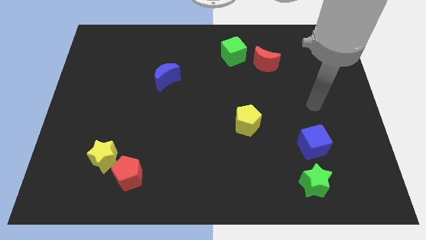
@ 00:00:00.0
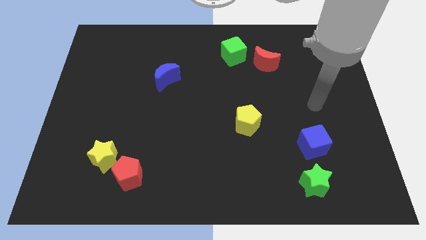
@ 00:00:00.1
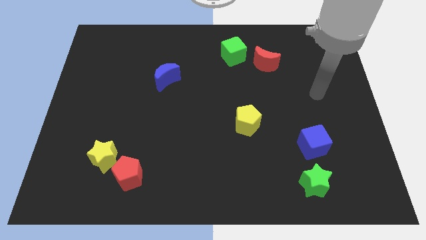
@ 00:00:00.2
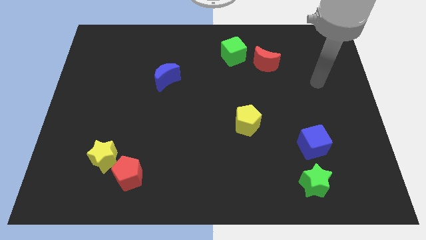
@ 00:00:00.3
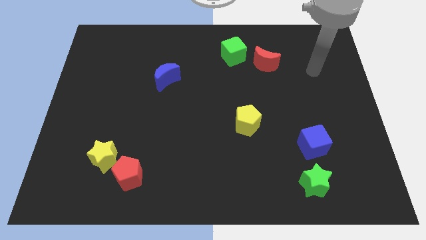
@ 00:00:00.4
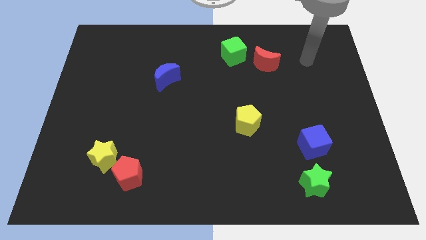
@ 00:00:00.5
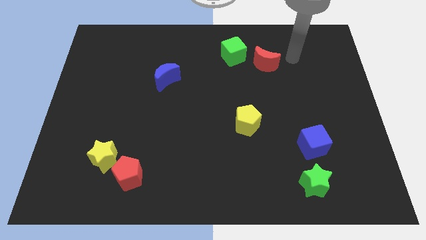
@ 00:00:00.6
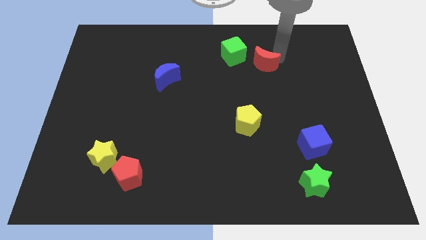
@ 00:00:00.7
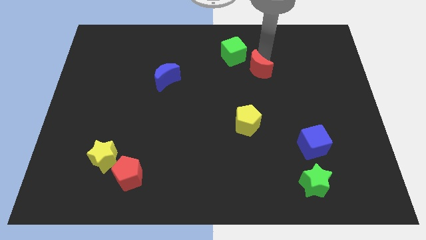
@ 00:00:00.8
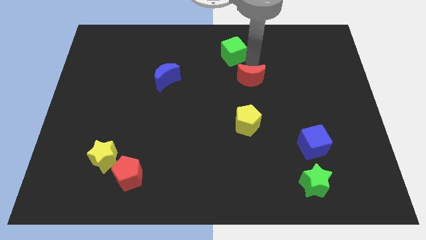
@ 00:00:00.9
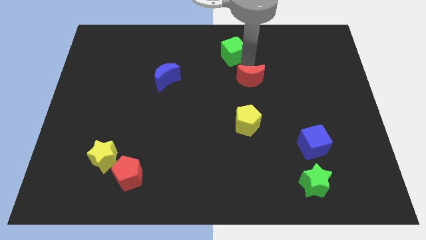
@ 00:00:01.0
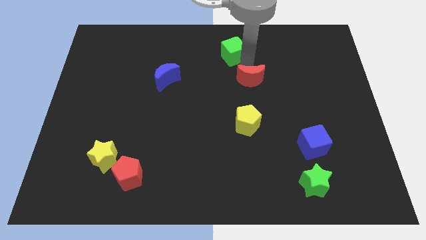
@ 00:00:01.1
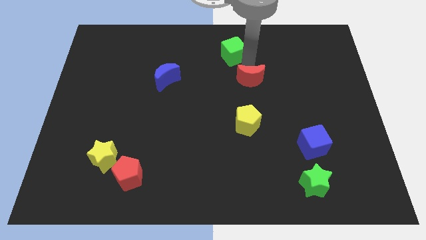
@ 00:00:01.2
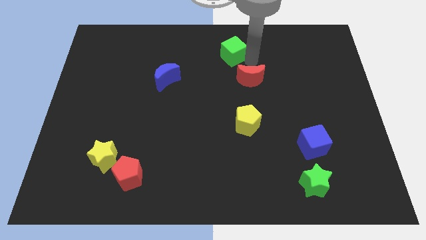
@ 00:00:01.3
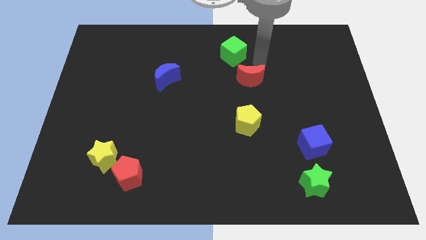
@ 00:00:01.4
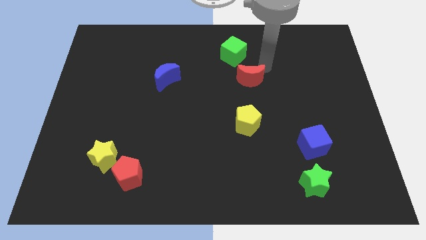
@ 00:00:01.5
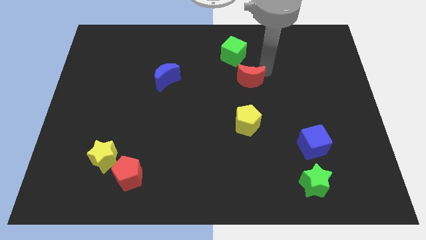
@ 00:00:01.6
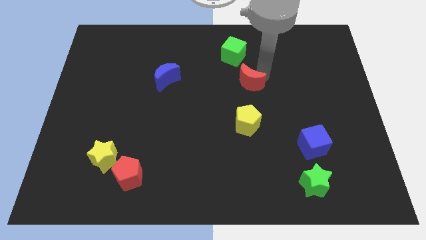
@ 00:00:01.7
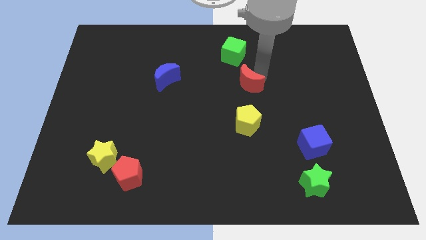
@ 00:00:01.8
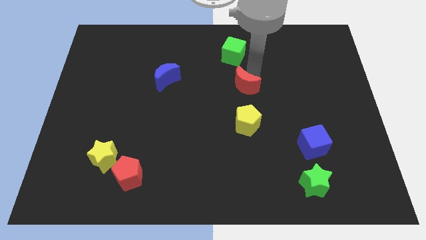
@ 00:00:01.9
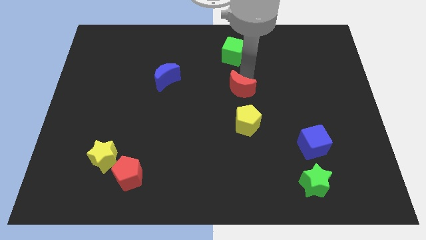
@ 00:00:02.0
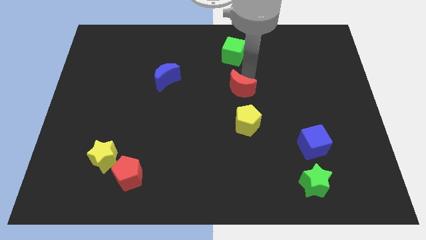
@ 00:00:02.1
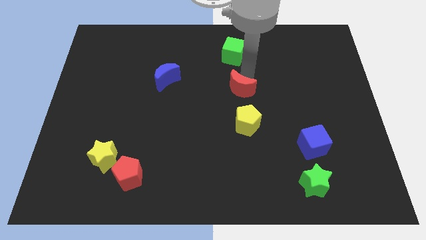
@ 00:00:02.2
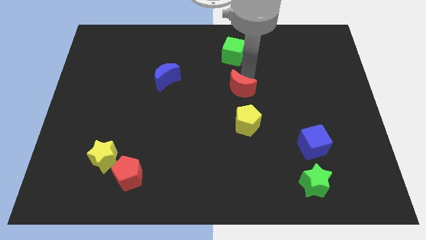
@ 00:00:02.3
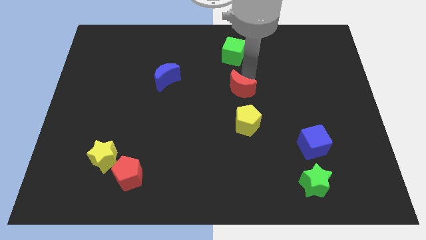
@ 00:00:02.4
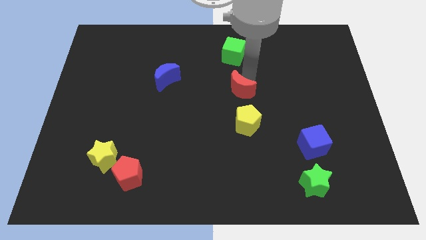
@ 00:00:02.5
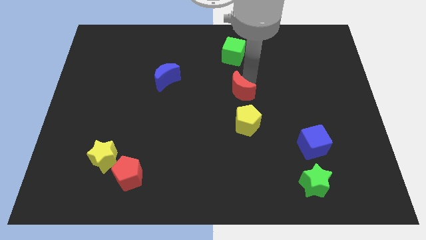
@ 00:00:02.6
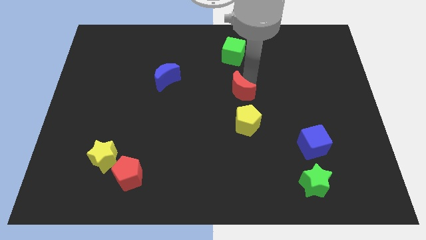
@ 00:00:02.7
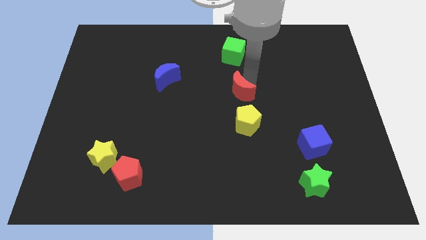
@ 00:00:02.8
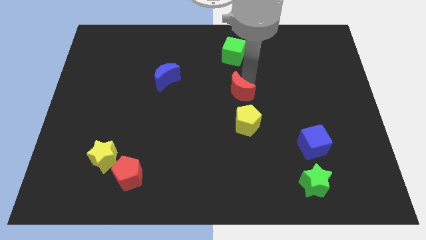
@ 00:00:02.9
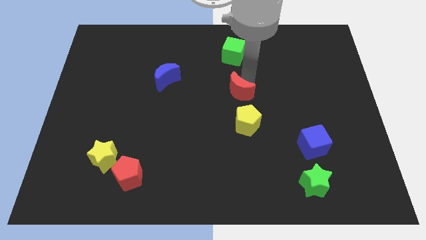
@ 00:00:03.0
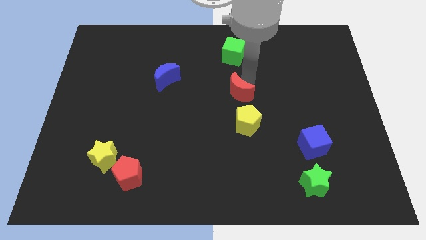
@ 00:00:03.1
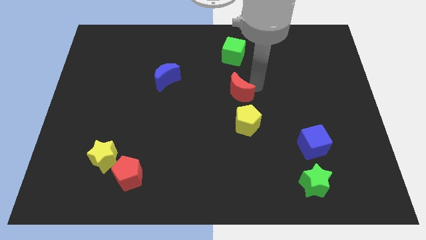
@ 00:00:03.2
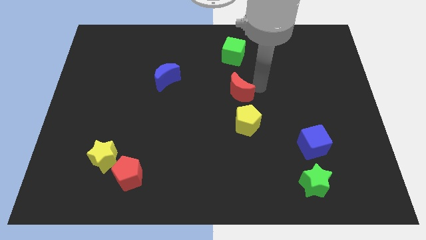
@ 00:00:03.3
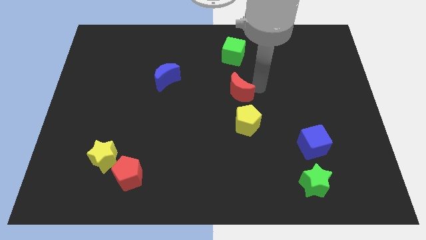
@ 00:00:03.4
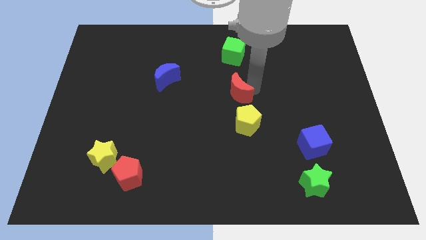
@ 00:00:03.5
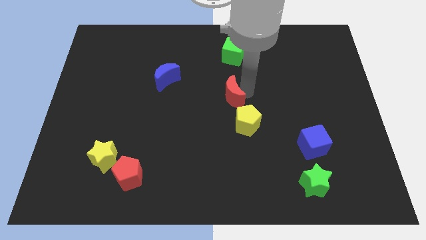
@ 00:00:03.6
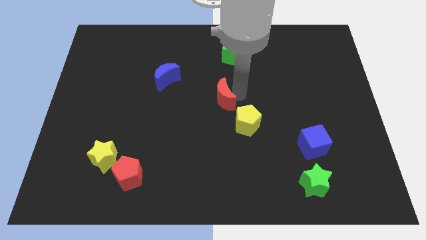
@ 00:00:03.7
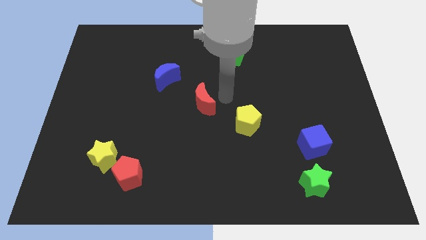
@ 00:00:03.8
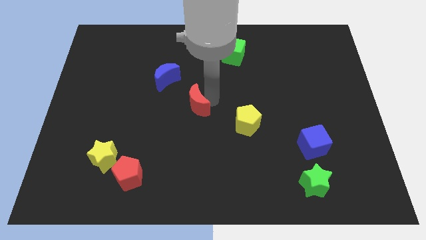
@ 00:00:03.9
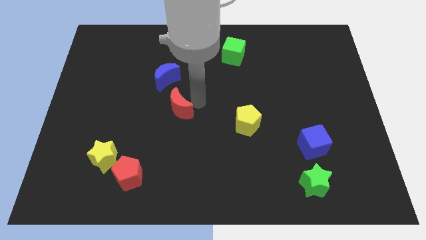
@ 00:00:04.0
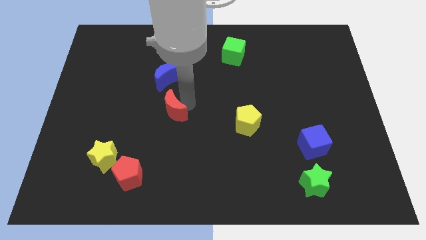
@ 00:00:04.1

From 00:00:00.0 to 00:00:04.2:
move thee red moon to the center of the board

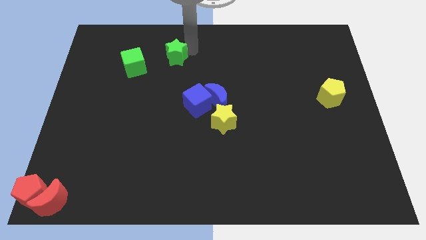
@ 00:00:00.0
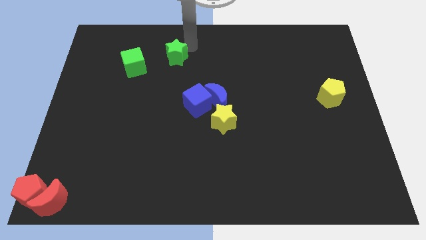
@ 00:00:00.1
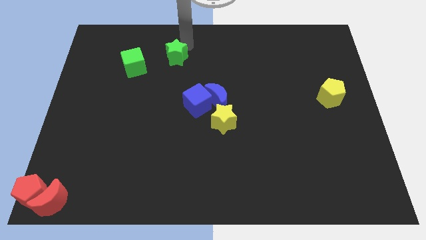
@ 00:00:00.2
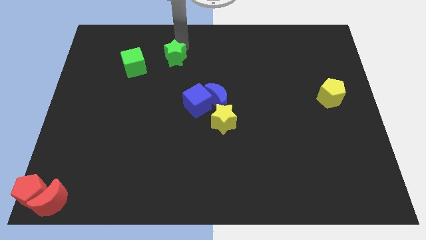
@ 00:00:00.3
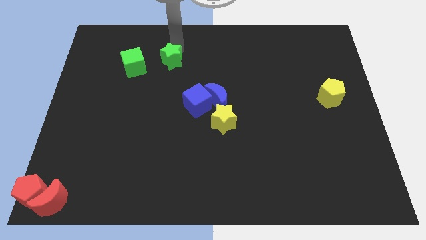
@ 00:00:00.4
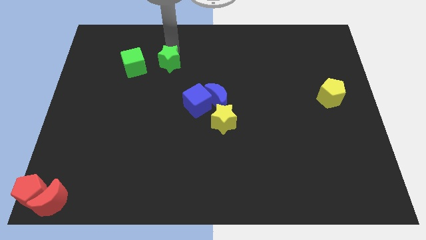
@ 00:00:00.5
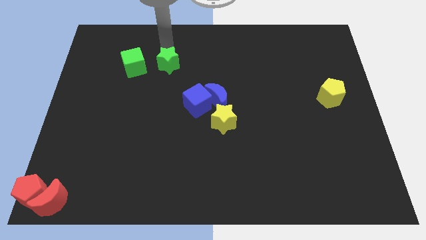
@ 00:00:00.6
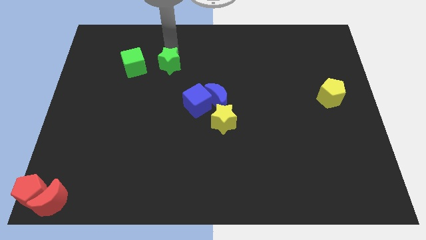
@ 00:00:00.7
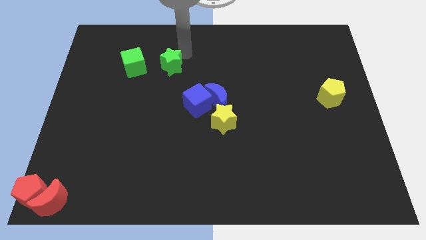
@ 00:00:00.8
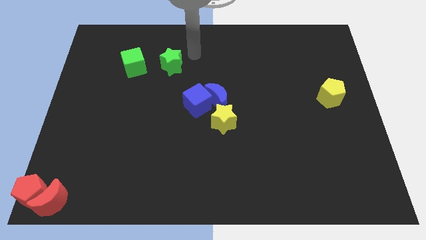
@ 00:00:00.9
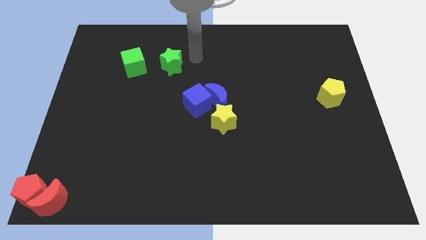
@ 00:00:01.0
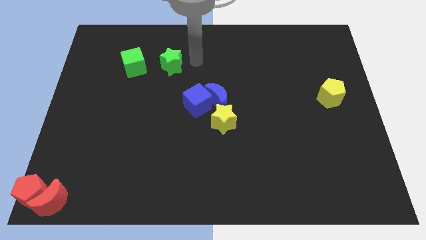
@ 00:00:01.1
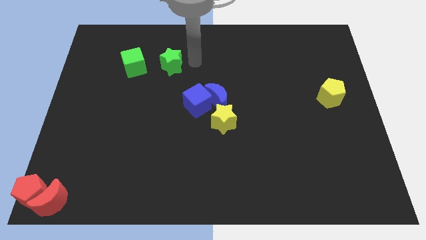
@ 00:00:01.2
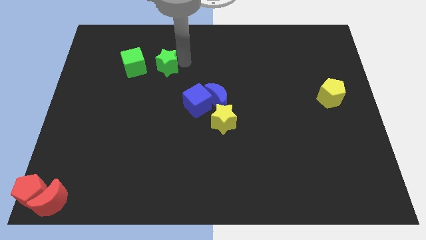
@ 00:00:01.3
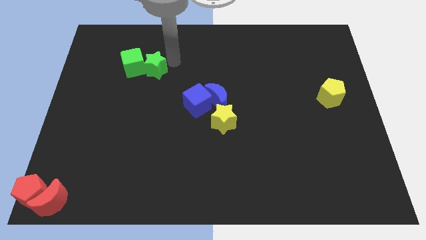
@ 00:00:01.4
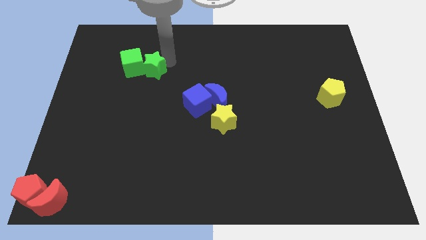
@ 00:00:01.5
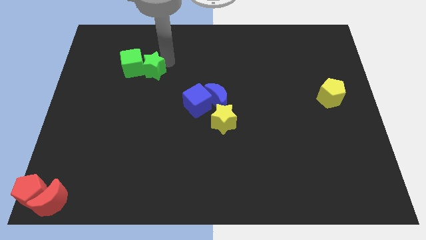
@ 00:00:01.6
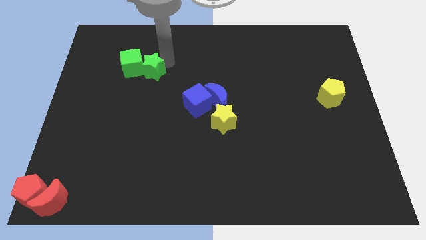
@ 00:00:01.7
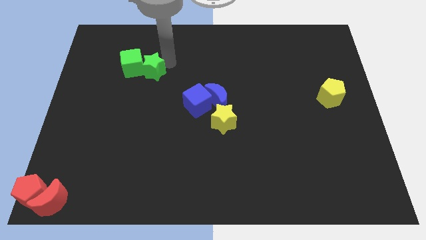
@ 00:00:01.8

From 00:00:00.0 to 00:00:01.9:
push the green star into green cube

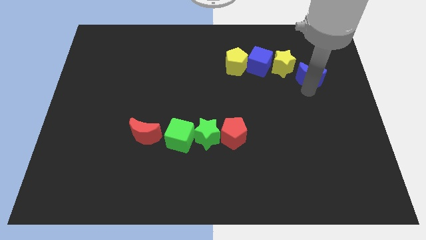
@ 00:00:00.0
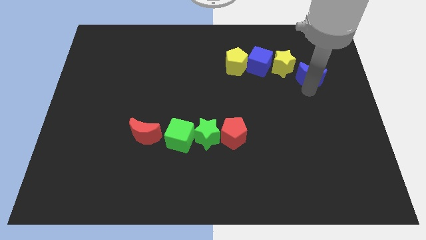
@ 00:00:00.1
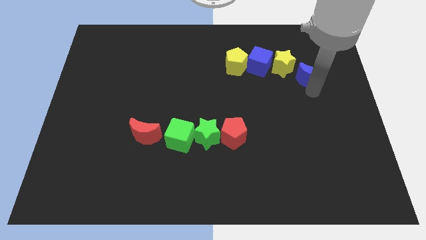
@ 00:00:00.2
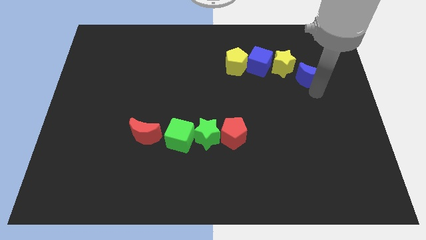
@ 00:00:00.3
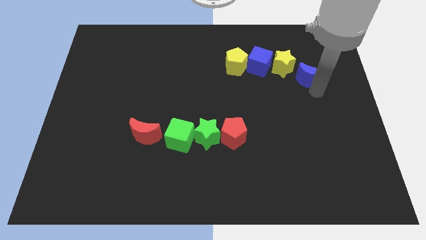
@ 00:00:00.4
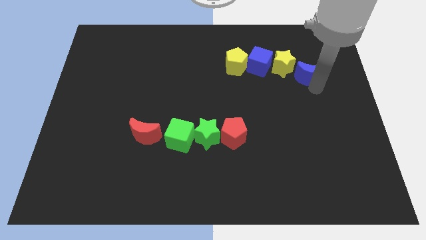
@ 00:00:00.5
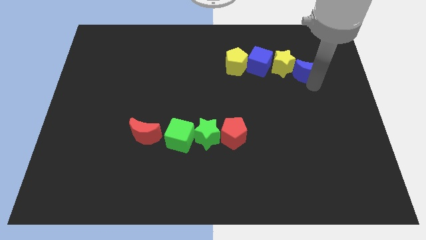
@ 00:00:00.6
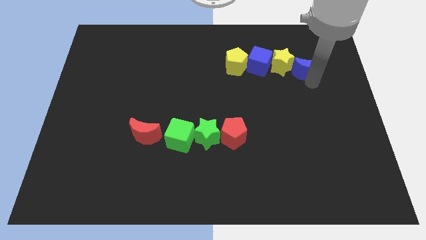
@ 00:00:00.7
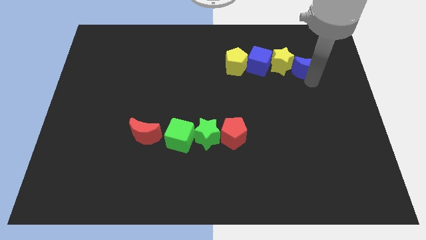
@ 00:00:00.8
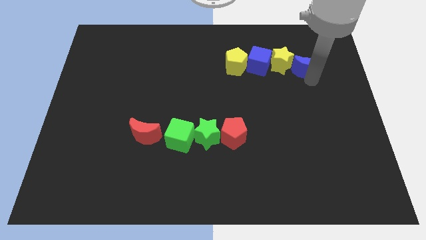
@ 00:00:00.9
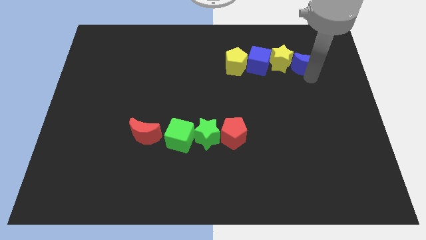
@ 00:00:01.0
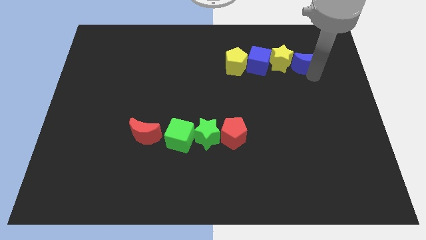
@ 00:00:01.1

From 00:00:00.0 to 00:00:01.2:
push the blue crescent into the yellow star

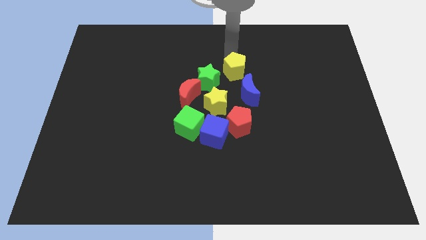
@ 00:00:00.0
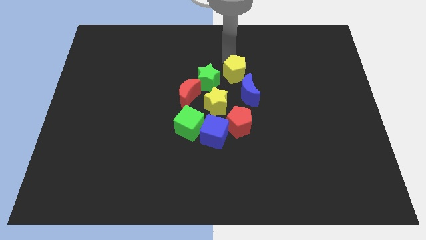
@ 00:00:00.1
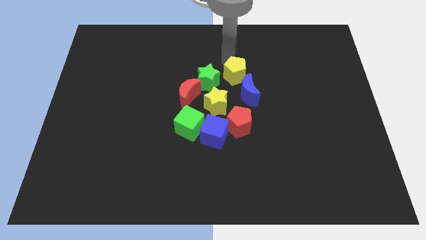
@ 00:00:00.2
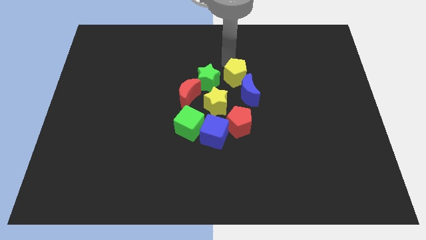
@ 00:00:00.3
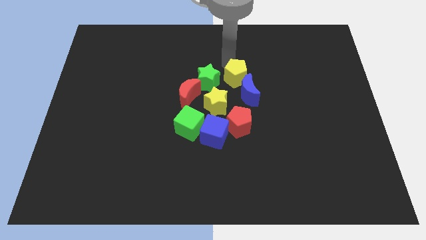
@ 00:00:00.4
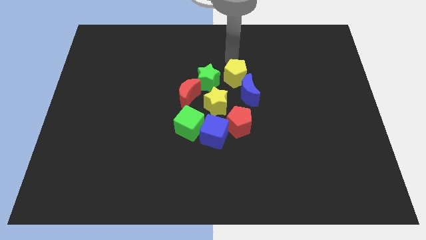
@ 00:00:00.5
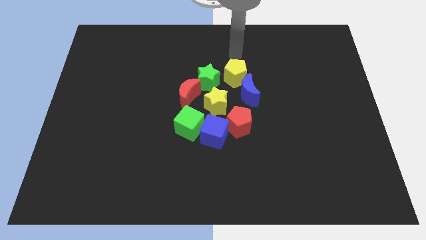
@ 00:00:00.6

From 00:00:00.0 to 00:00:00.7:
move the yellow pentagon slightly to the down

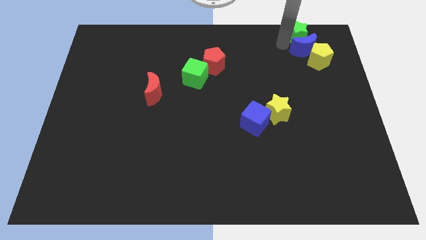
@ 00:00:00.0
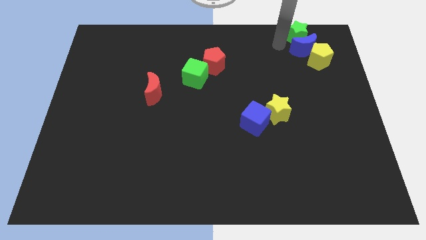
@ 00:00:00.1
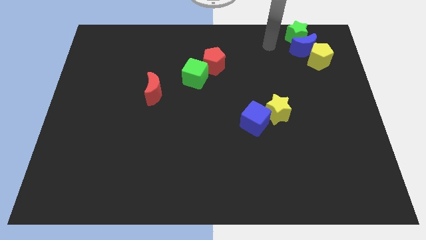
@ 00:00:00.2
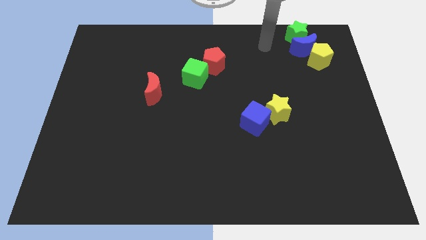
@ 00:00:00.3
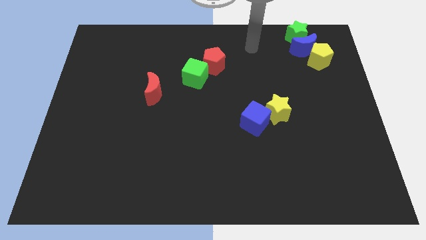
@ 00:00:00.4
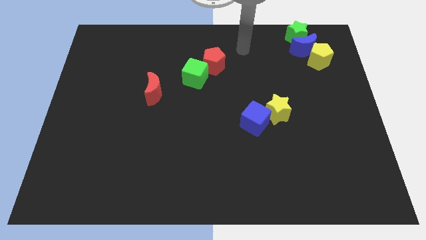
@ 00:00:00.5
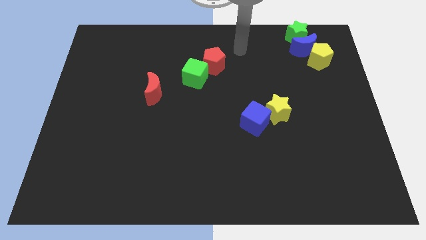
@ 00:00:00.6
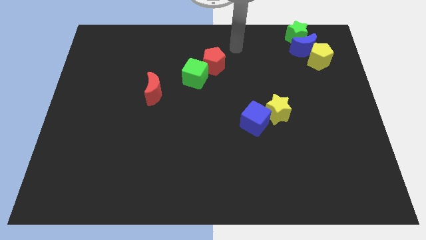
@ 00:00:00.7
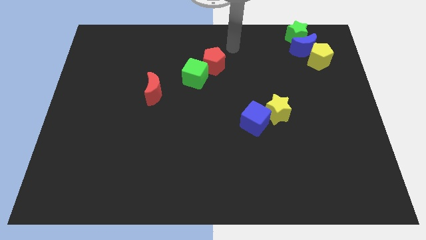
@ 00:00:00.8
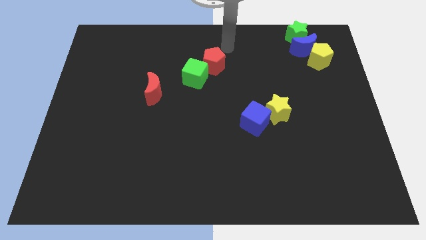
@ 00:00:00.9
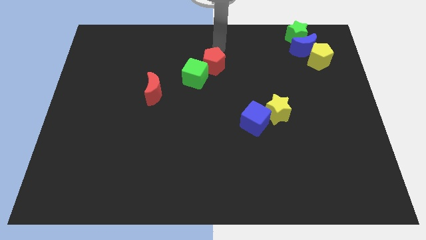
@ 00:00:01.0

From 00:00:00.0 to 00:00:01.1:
move the arm to the top of the red pentagon
